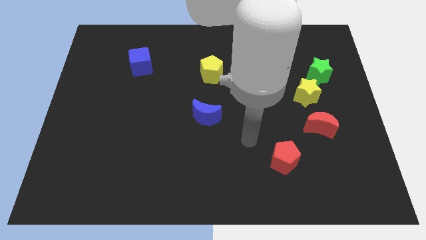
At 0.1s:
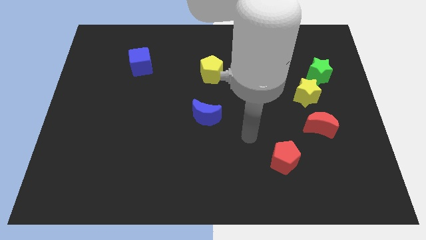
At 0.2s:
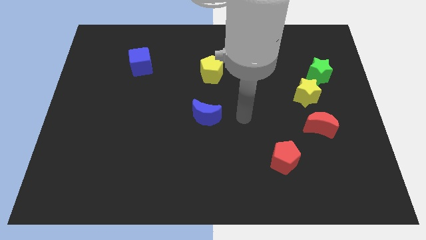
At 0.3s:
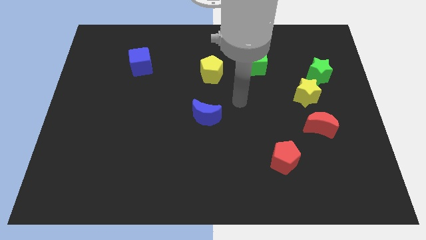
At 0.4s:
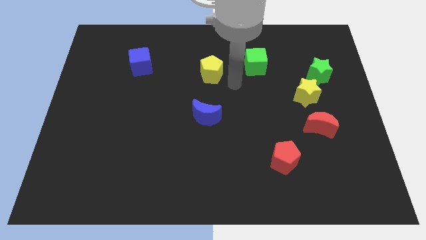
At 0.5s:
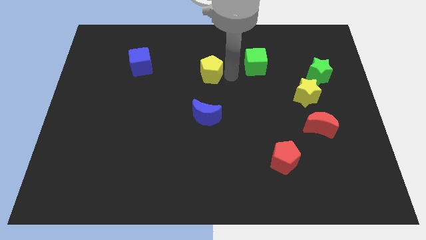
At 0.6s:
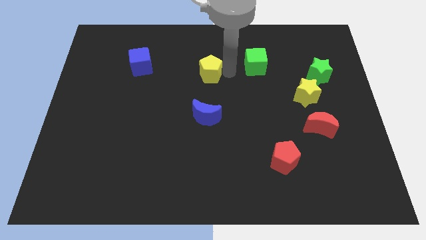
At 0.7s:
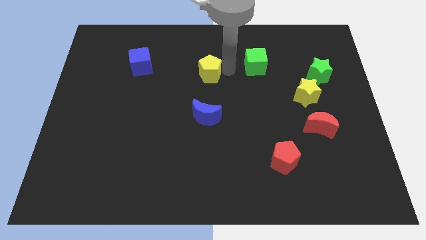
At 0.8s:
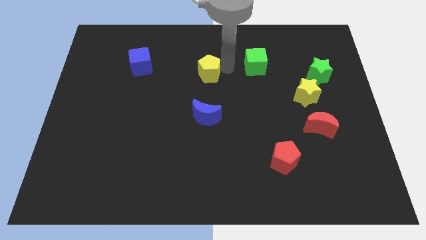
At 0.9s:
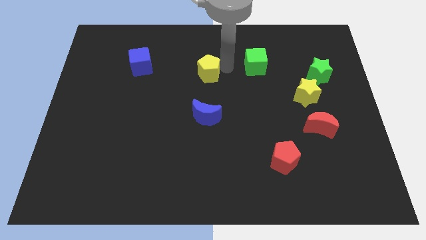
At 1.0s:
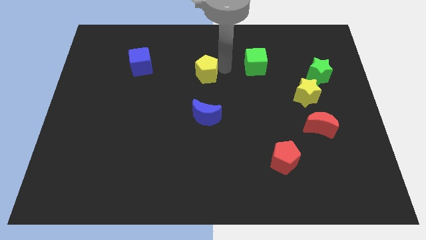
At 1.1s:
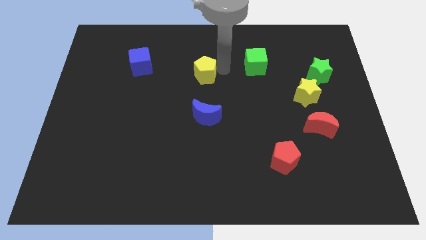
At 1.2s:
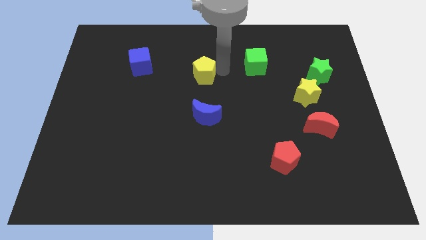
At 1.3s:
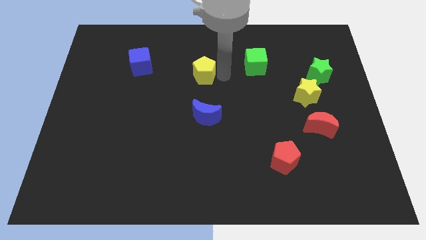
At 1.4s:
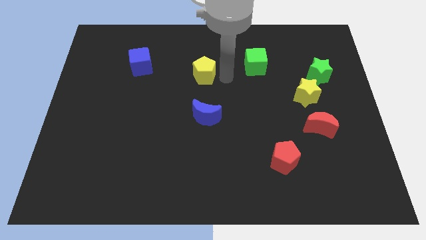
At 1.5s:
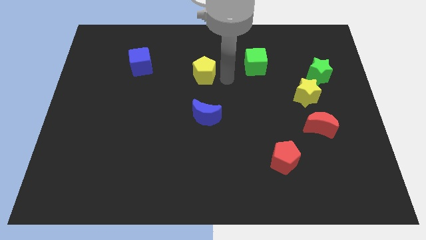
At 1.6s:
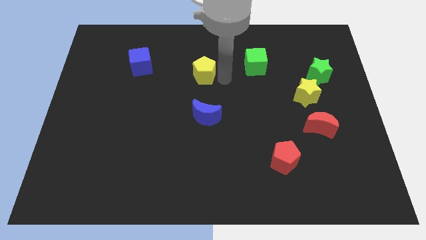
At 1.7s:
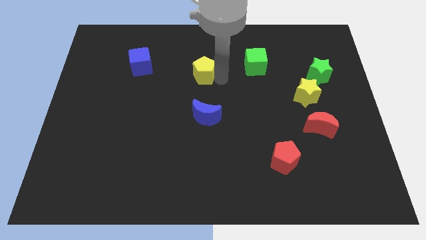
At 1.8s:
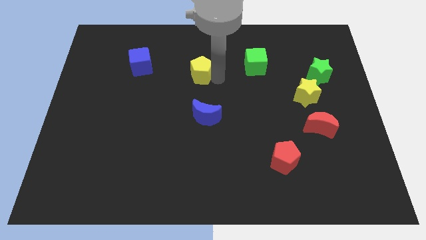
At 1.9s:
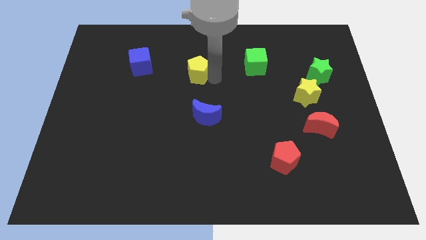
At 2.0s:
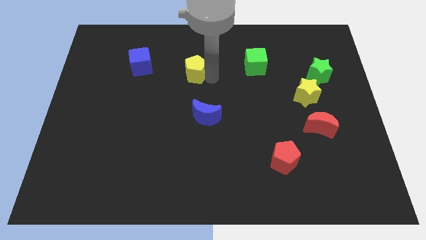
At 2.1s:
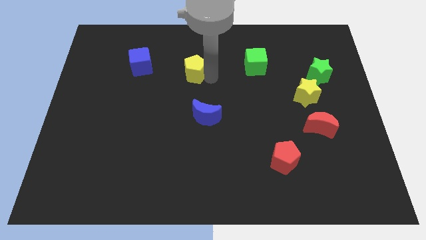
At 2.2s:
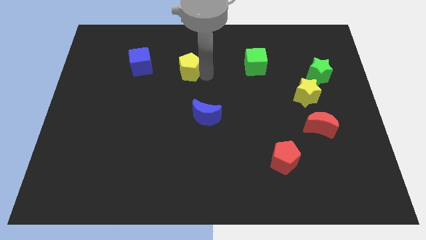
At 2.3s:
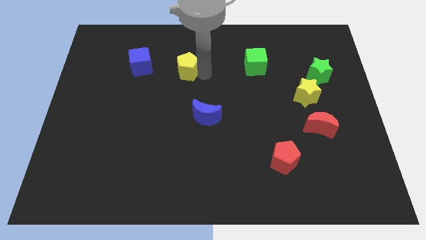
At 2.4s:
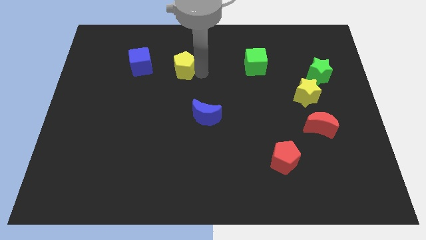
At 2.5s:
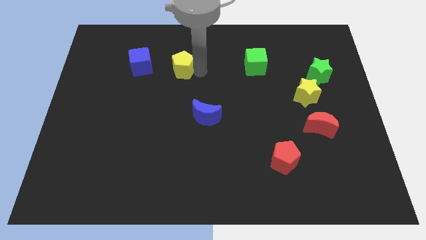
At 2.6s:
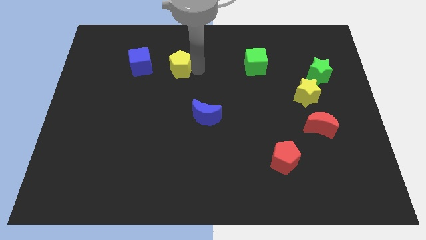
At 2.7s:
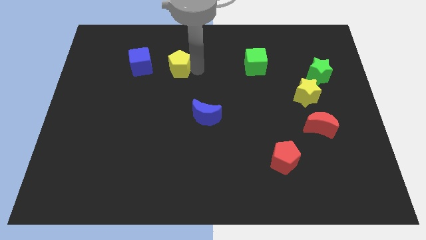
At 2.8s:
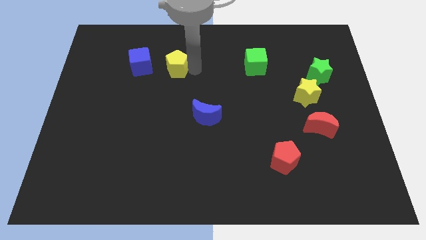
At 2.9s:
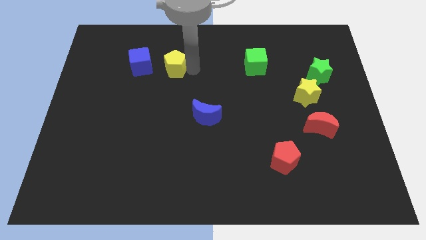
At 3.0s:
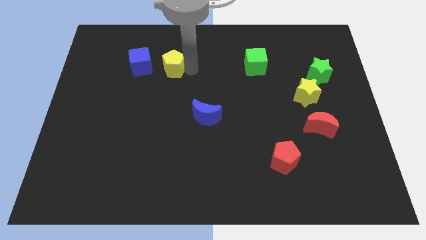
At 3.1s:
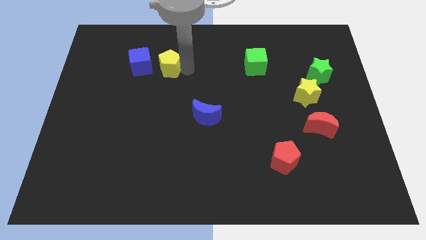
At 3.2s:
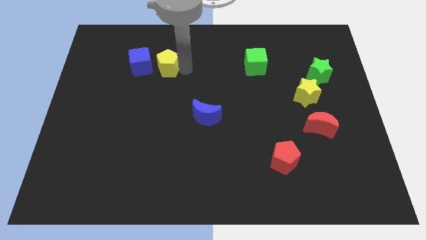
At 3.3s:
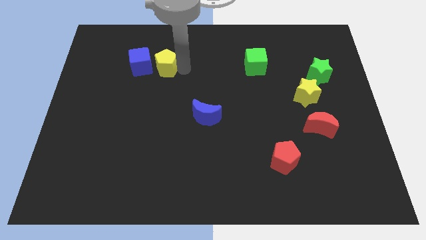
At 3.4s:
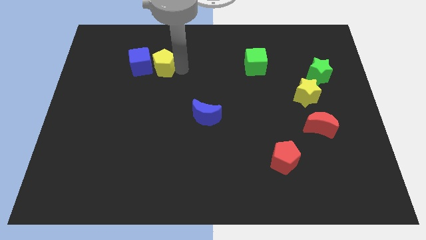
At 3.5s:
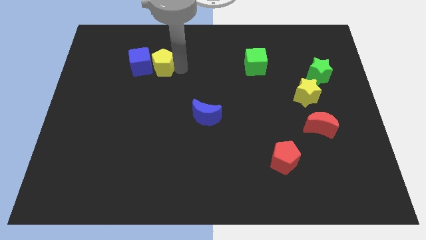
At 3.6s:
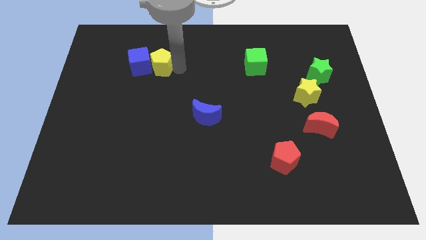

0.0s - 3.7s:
put the yellow pentagon next to the blue cube

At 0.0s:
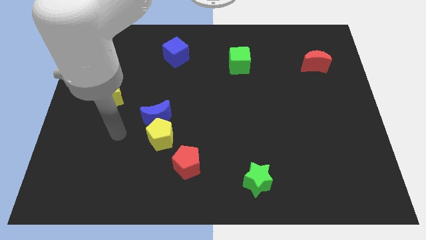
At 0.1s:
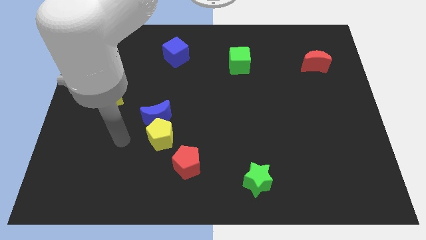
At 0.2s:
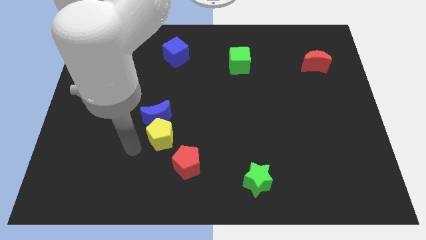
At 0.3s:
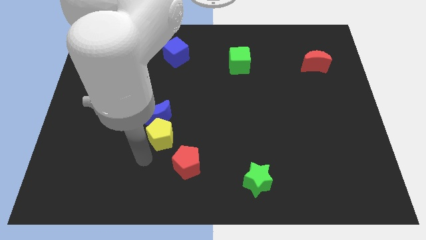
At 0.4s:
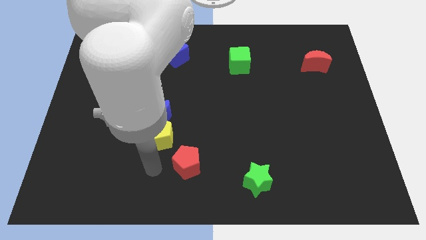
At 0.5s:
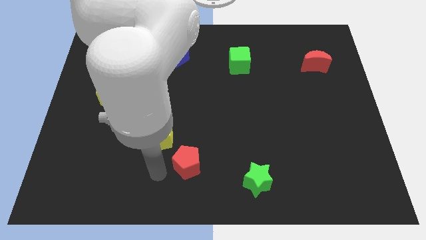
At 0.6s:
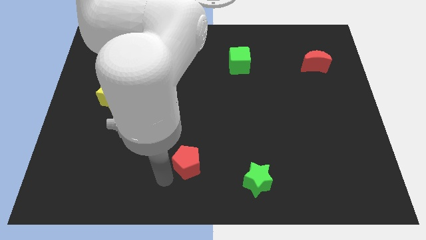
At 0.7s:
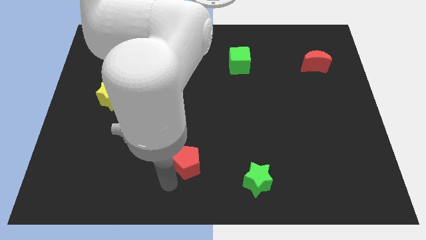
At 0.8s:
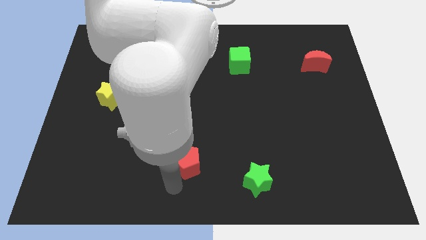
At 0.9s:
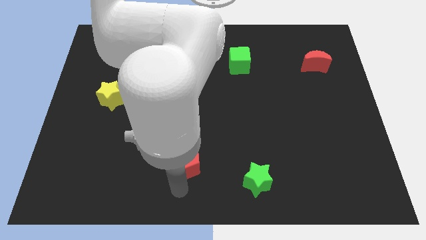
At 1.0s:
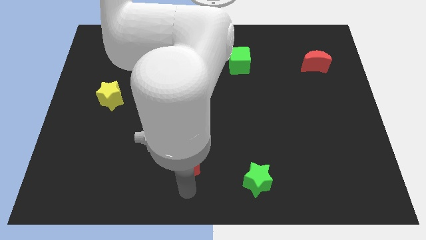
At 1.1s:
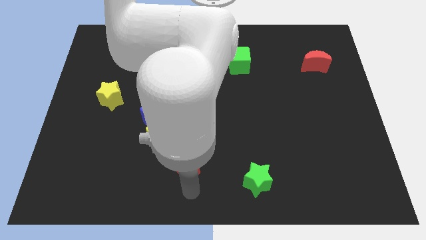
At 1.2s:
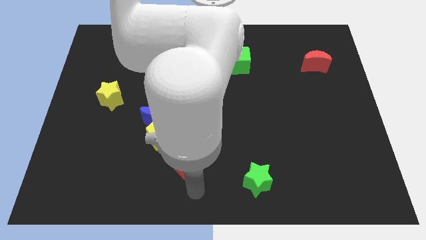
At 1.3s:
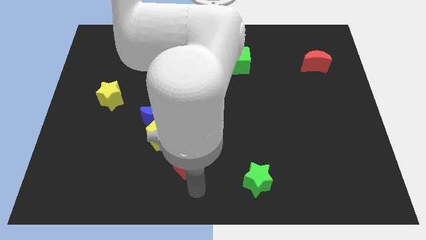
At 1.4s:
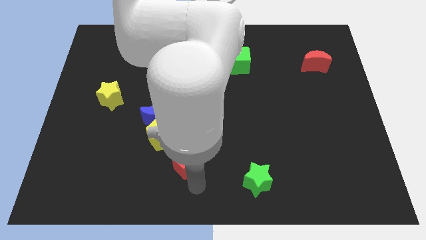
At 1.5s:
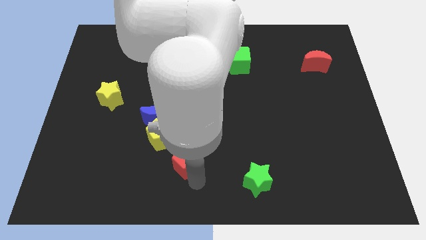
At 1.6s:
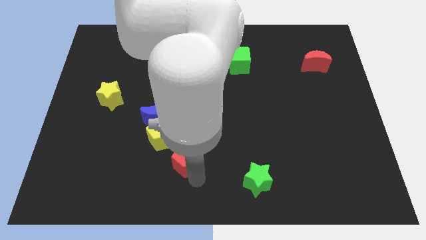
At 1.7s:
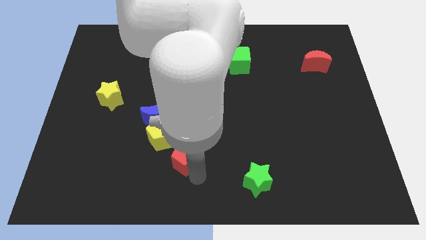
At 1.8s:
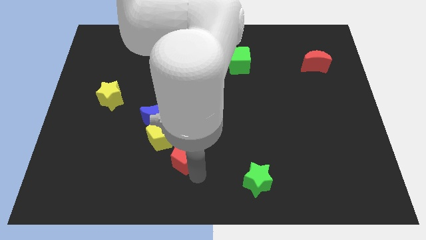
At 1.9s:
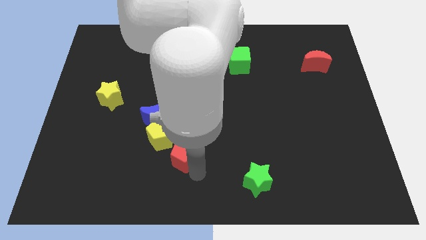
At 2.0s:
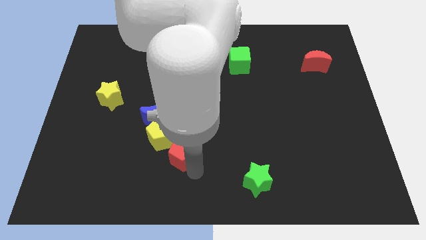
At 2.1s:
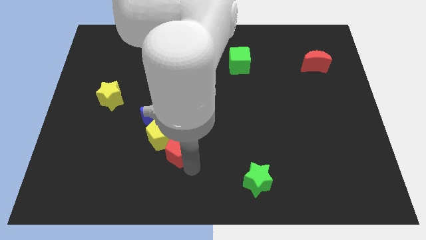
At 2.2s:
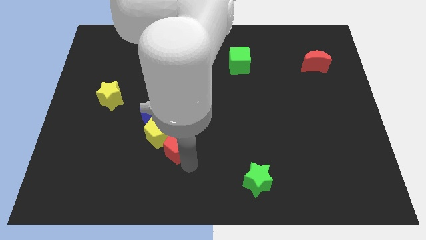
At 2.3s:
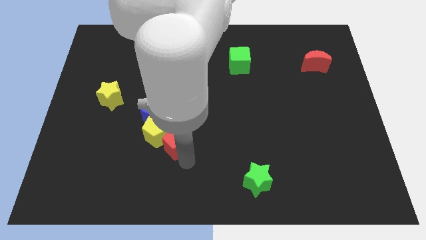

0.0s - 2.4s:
push the red pentagon to the yellow pentagon

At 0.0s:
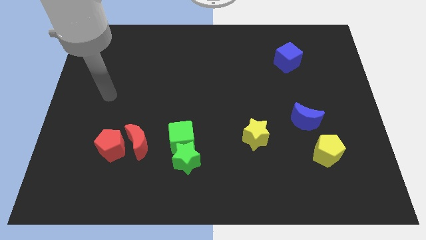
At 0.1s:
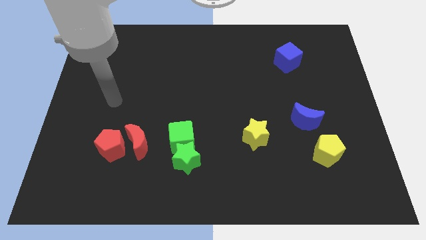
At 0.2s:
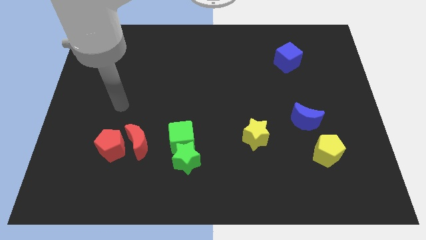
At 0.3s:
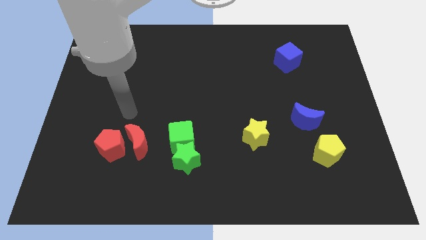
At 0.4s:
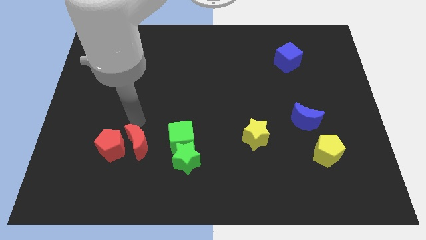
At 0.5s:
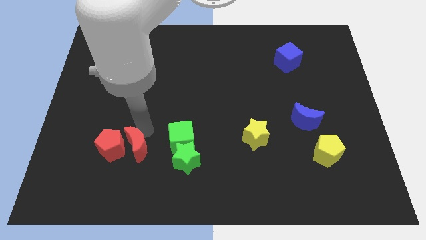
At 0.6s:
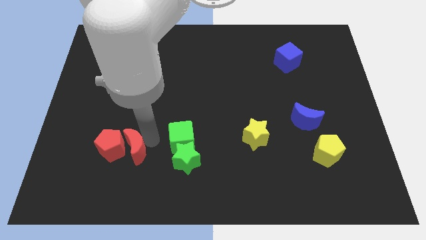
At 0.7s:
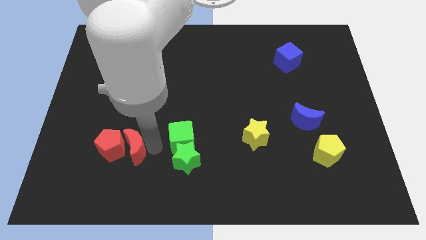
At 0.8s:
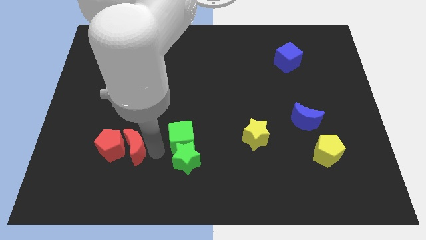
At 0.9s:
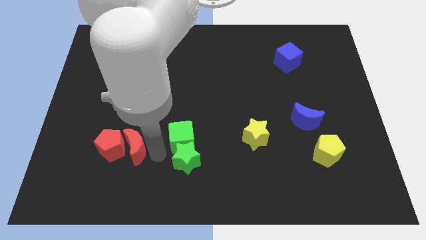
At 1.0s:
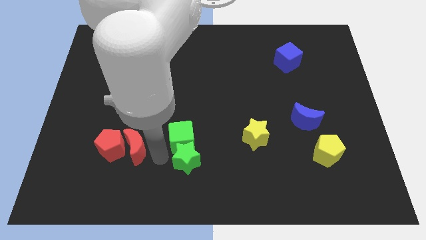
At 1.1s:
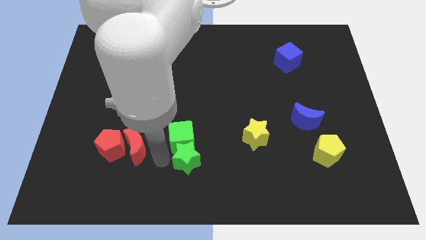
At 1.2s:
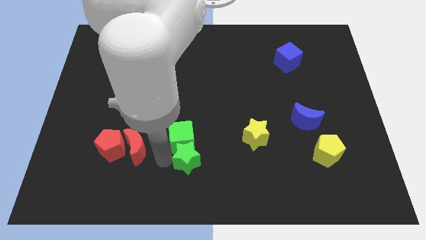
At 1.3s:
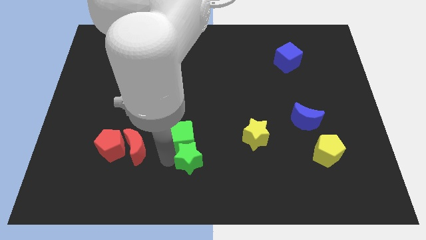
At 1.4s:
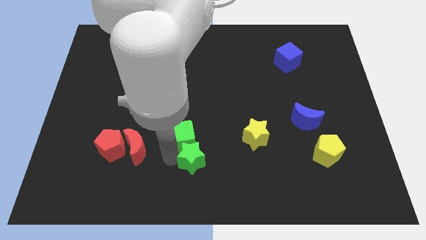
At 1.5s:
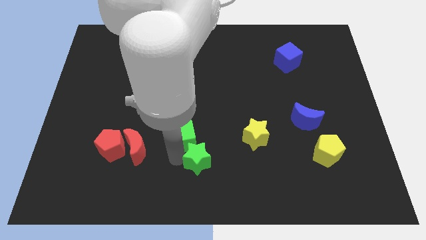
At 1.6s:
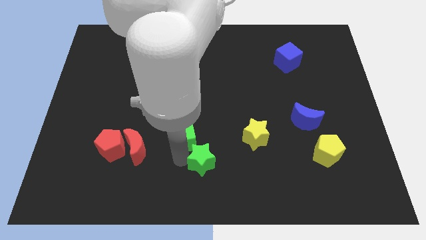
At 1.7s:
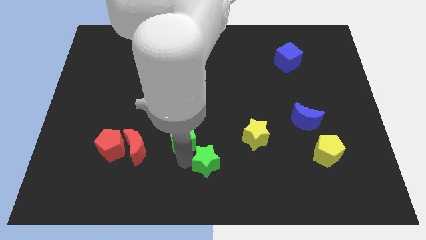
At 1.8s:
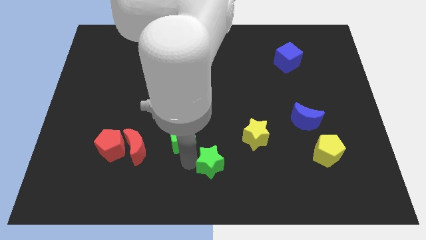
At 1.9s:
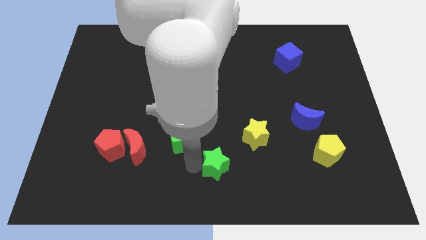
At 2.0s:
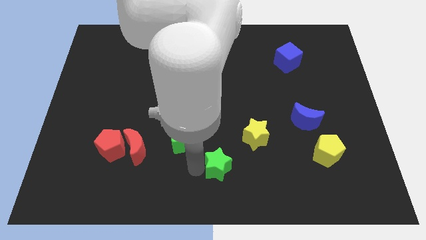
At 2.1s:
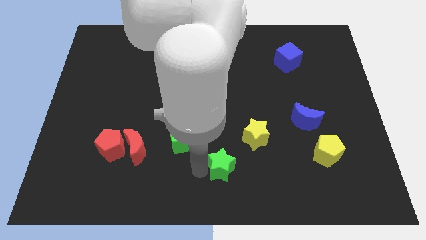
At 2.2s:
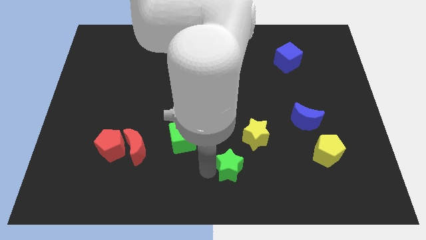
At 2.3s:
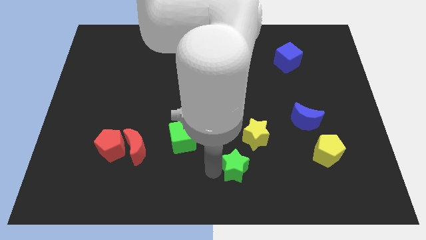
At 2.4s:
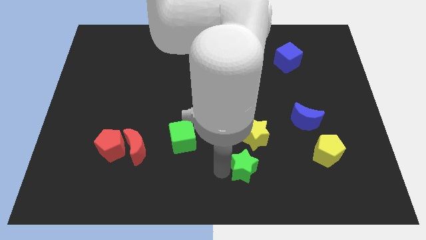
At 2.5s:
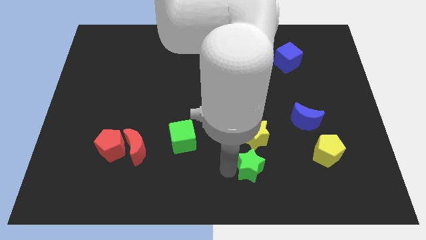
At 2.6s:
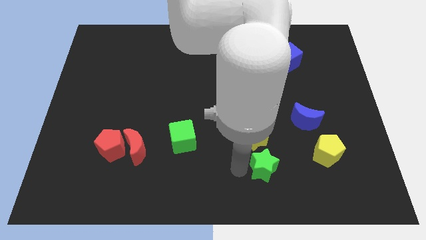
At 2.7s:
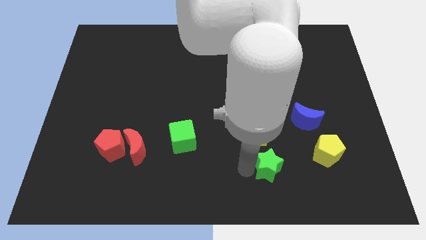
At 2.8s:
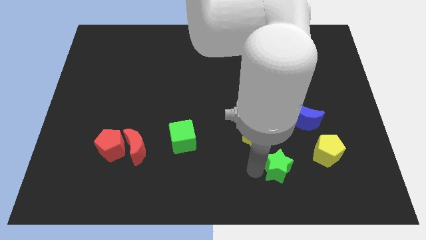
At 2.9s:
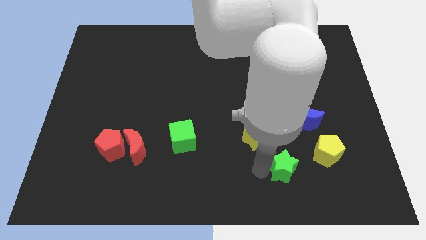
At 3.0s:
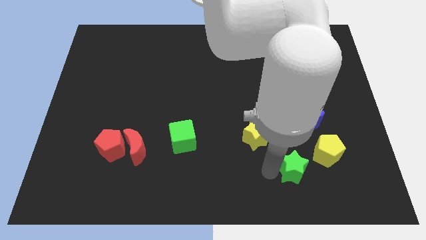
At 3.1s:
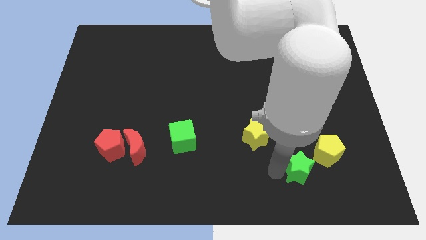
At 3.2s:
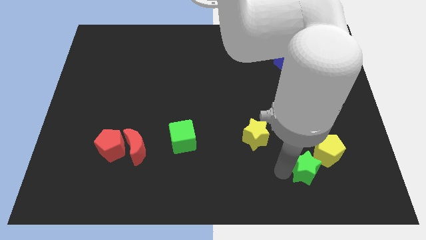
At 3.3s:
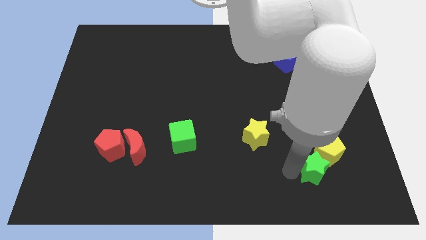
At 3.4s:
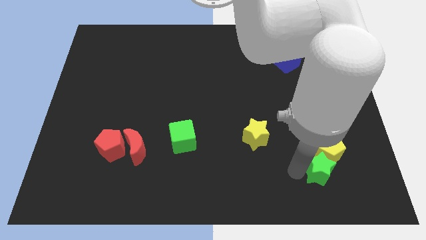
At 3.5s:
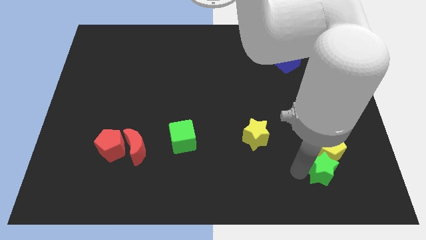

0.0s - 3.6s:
push the green star next to the yellow pentagon
